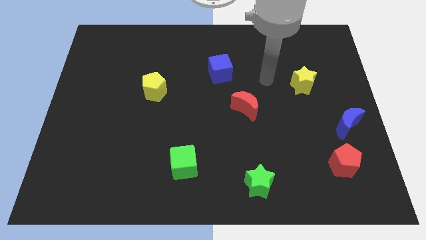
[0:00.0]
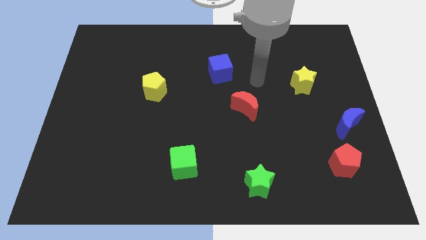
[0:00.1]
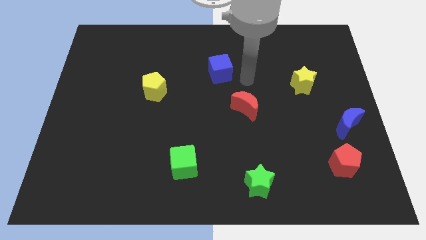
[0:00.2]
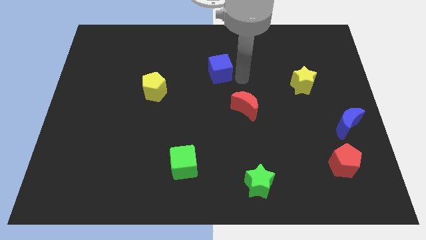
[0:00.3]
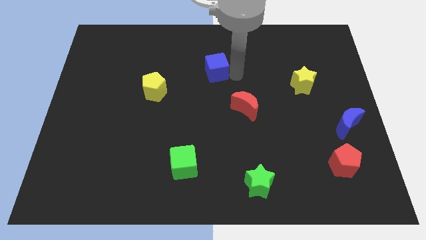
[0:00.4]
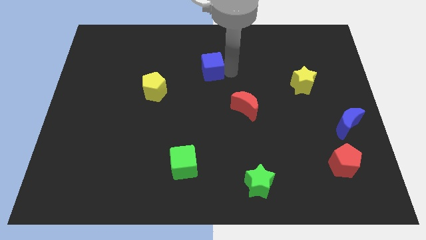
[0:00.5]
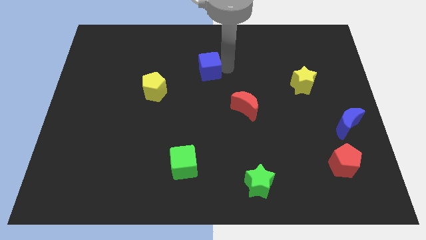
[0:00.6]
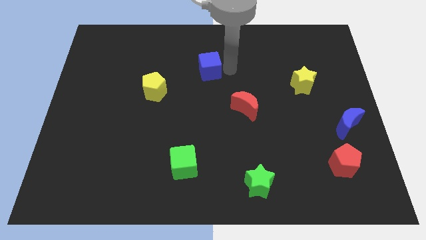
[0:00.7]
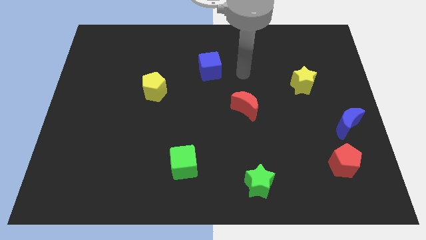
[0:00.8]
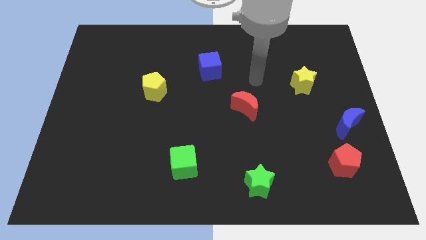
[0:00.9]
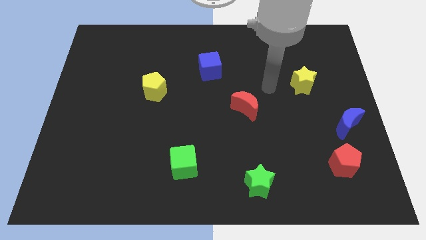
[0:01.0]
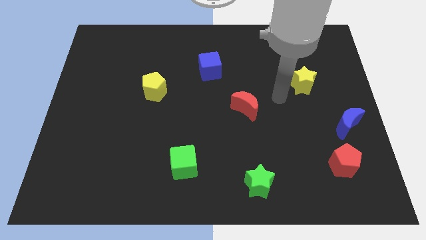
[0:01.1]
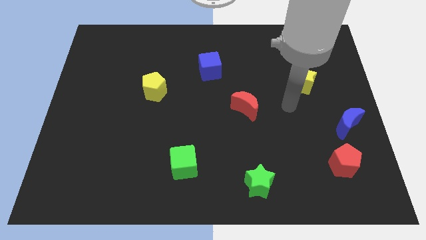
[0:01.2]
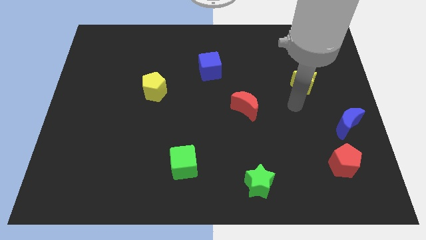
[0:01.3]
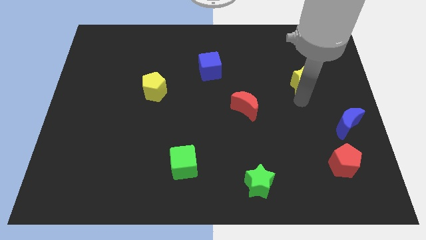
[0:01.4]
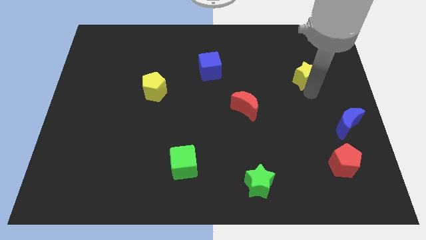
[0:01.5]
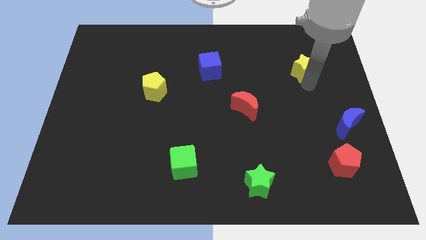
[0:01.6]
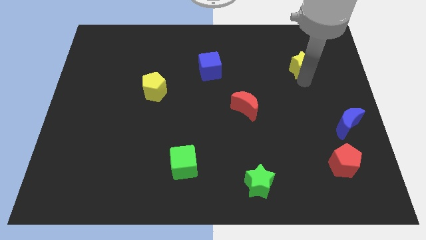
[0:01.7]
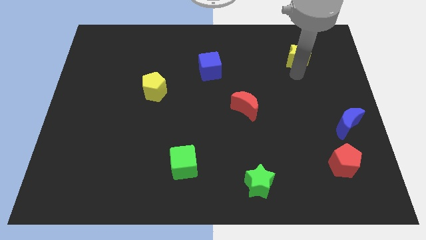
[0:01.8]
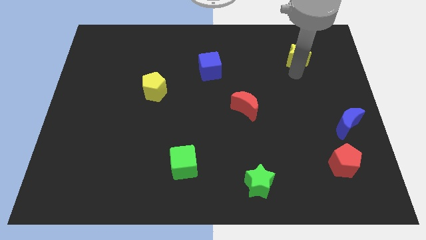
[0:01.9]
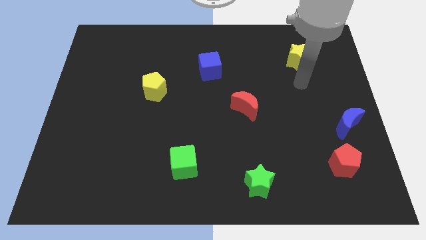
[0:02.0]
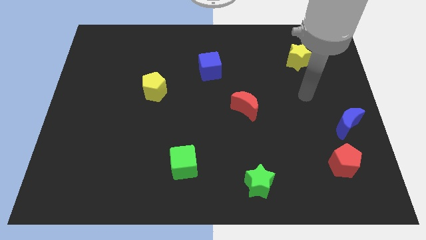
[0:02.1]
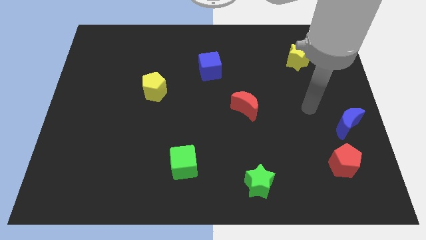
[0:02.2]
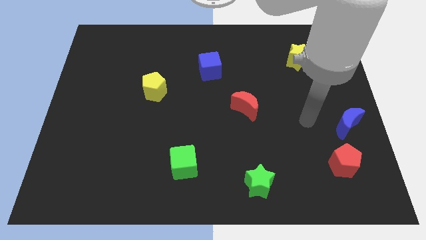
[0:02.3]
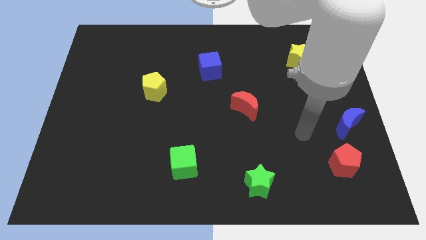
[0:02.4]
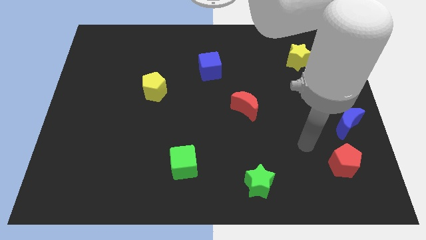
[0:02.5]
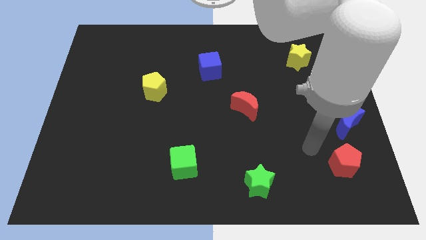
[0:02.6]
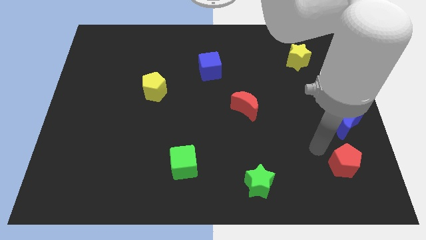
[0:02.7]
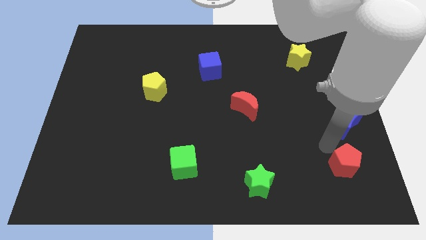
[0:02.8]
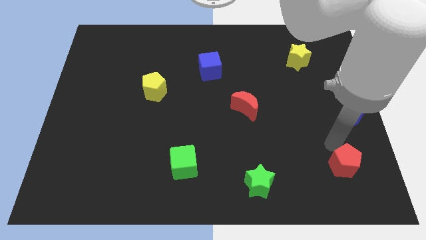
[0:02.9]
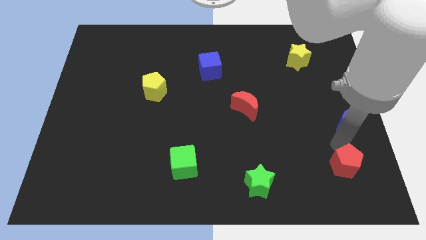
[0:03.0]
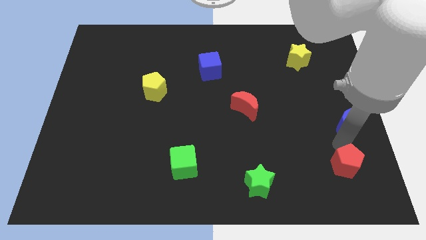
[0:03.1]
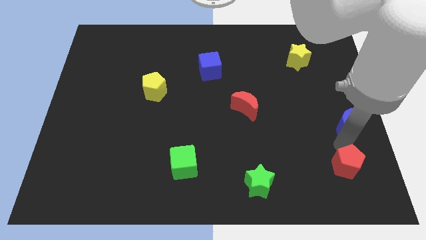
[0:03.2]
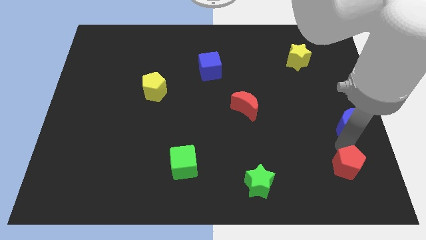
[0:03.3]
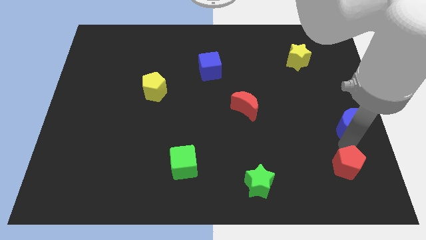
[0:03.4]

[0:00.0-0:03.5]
move your arm away from the blue cube

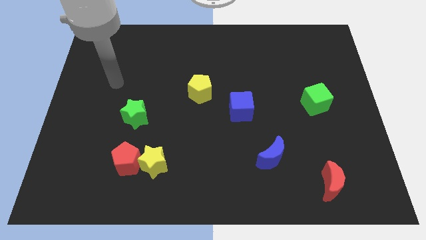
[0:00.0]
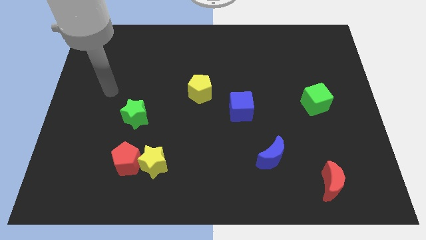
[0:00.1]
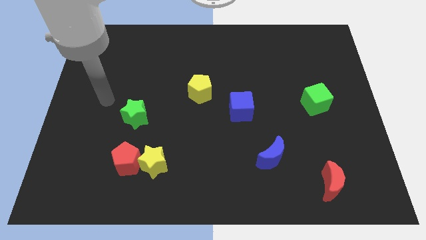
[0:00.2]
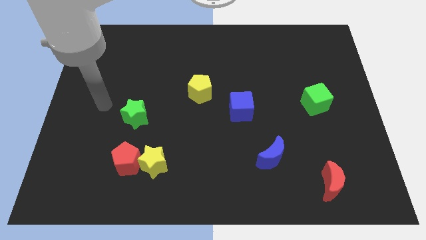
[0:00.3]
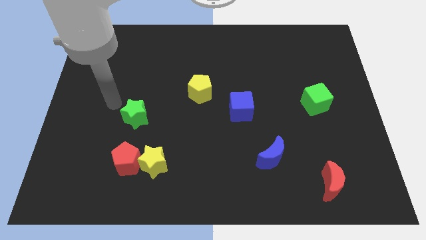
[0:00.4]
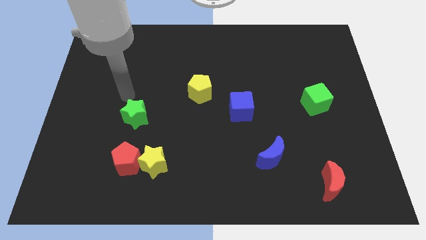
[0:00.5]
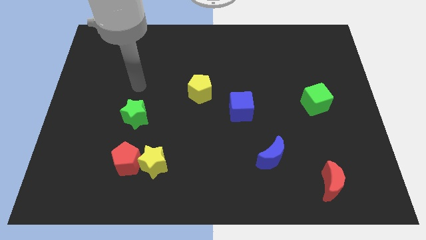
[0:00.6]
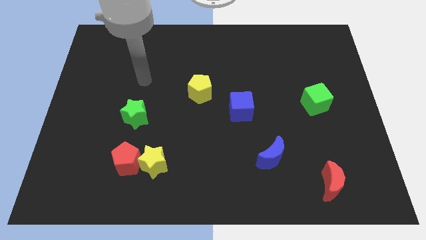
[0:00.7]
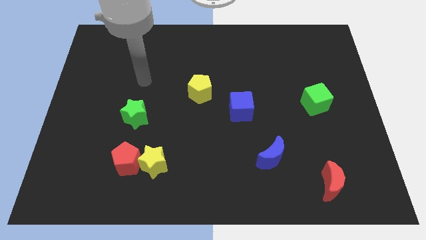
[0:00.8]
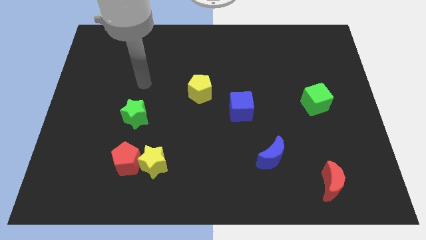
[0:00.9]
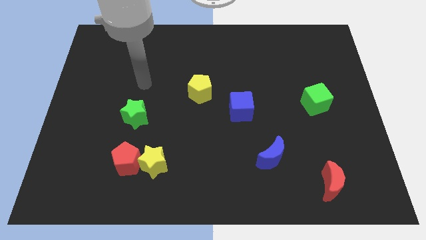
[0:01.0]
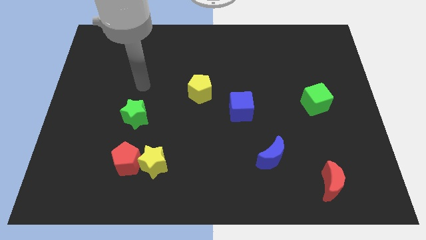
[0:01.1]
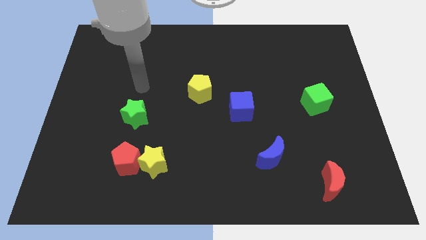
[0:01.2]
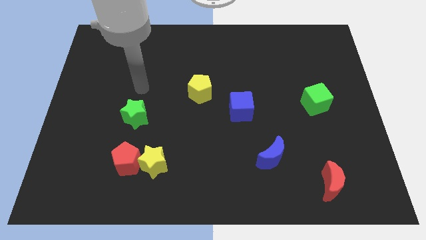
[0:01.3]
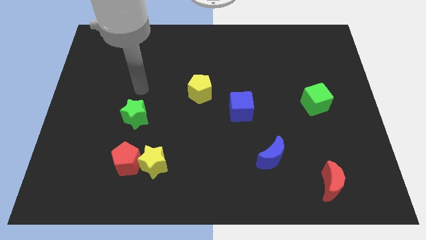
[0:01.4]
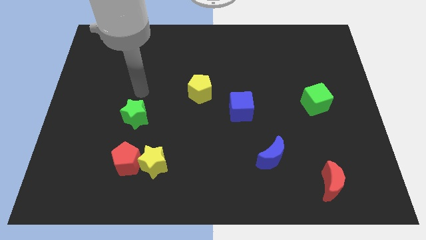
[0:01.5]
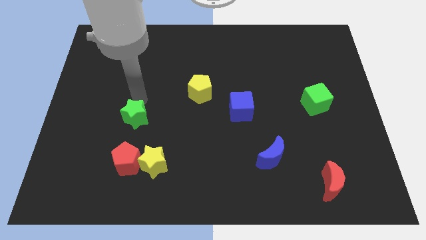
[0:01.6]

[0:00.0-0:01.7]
place the arm above the green star

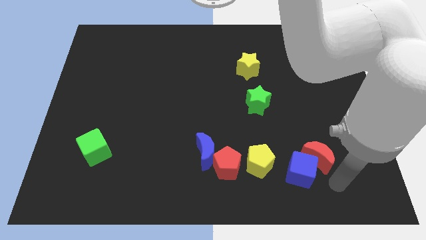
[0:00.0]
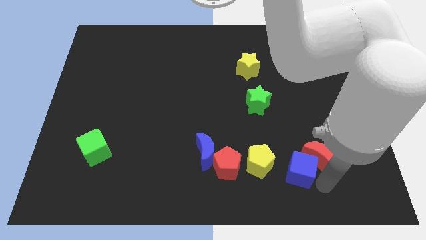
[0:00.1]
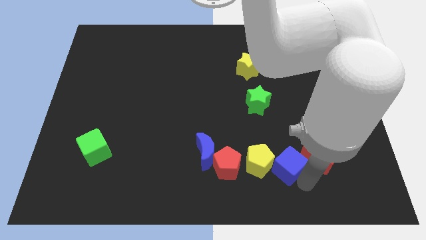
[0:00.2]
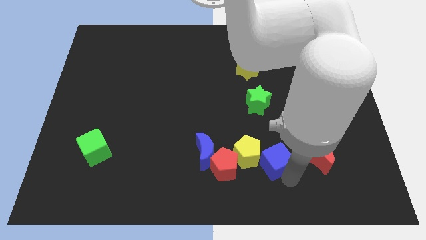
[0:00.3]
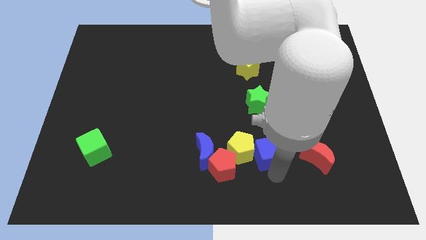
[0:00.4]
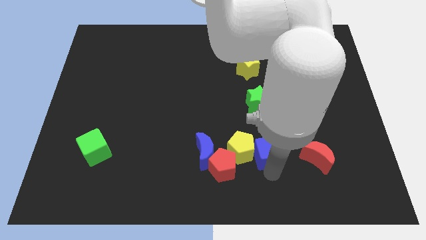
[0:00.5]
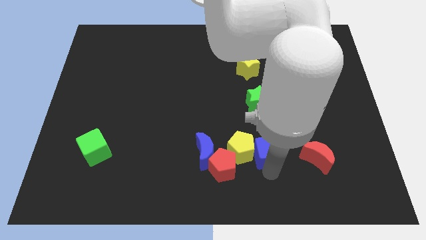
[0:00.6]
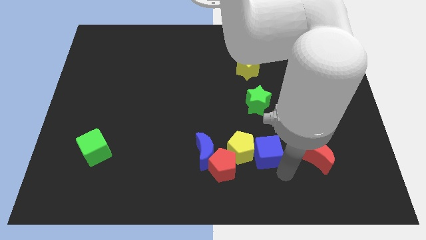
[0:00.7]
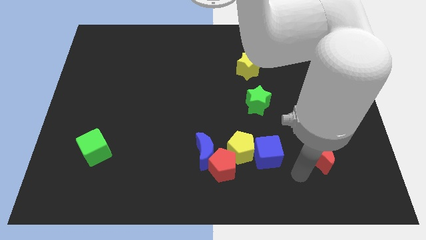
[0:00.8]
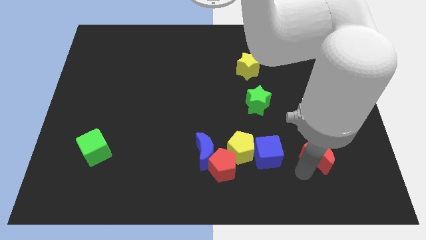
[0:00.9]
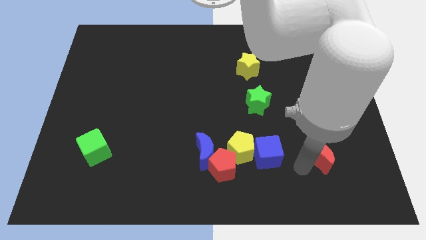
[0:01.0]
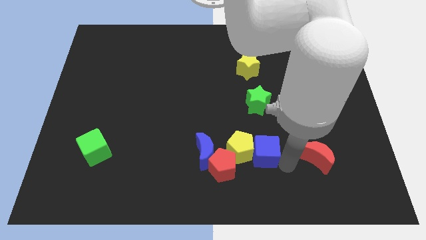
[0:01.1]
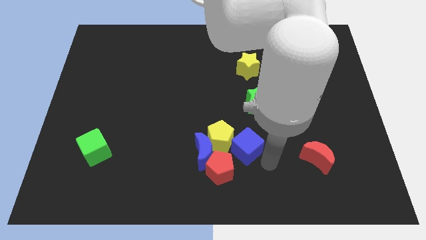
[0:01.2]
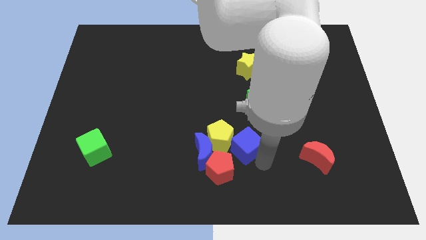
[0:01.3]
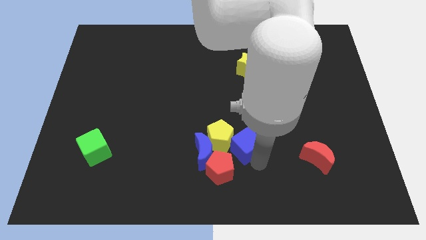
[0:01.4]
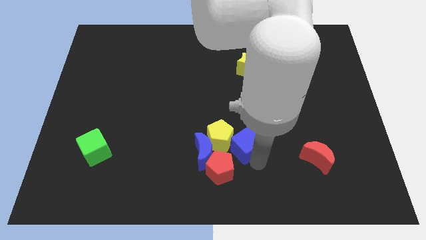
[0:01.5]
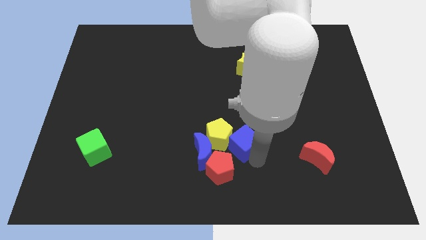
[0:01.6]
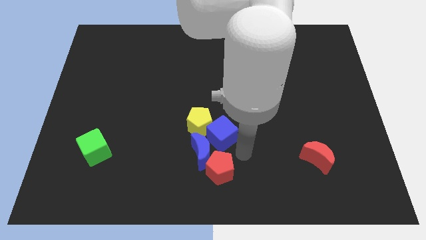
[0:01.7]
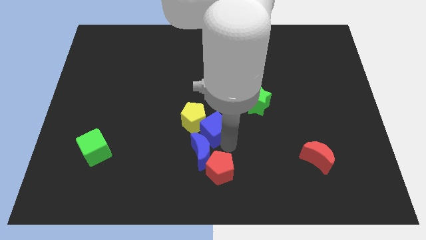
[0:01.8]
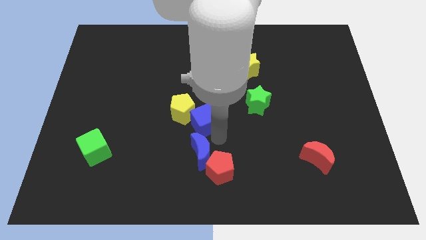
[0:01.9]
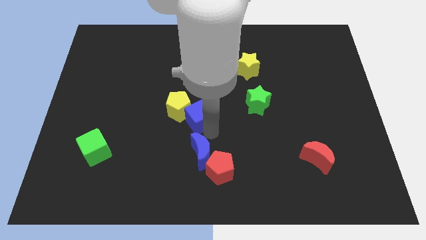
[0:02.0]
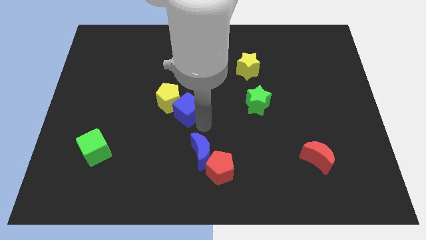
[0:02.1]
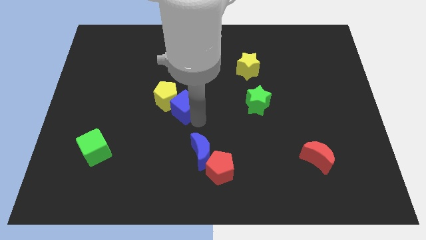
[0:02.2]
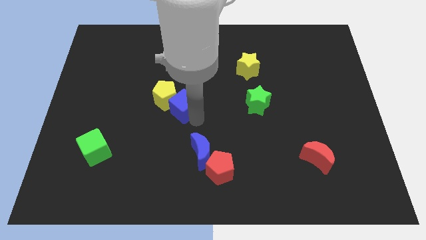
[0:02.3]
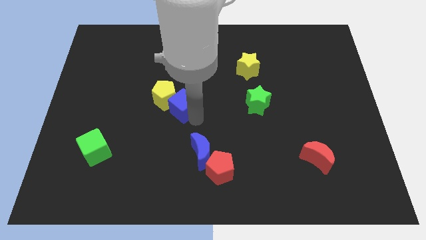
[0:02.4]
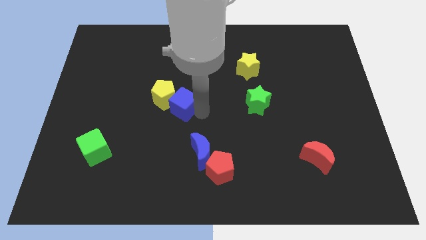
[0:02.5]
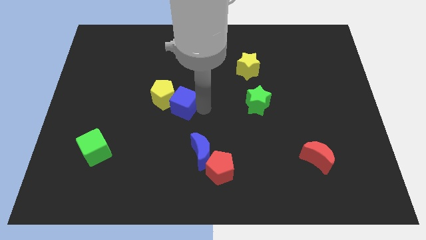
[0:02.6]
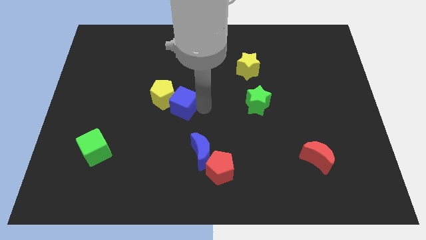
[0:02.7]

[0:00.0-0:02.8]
move blue cube along with yellow pentagon towards the top left of the board

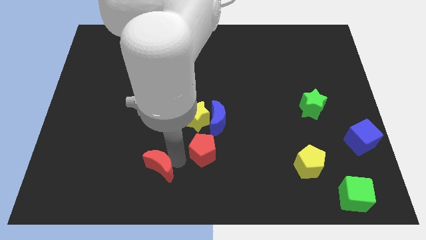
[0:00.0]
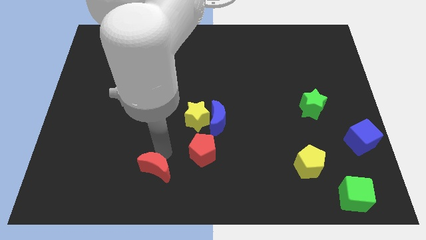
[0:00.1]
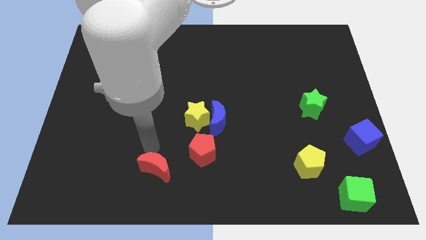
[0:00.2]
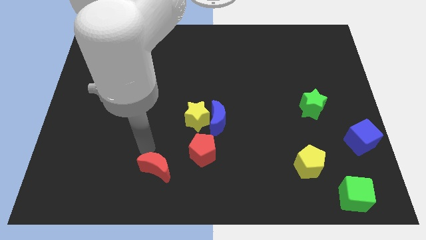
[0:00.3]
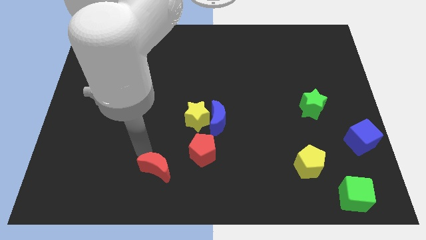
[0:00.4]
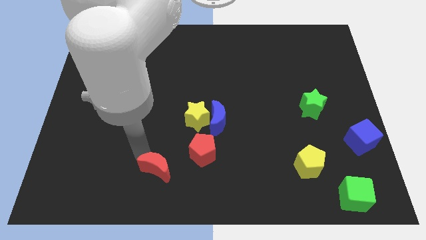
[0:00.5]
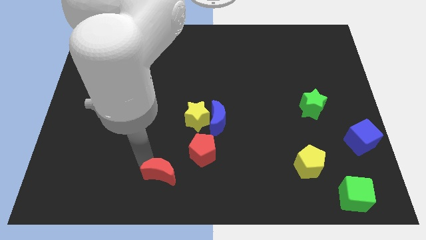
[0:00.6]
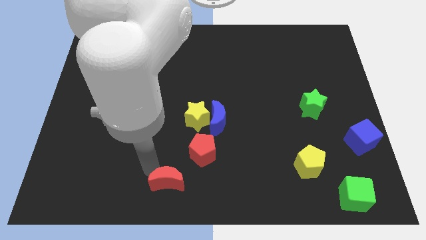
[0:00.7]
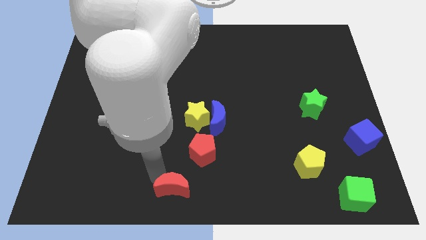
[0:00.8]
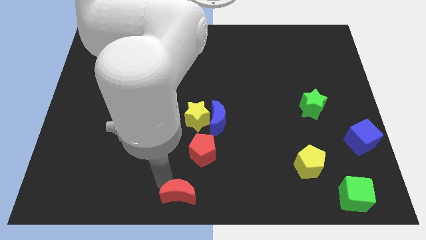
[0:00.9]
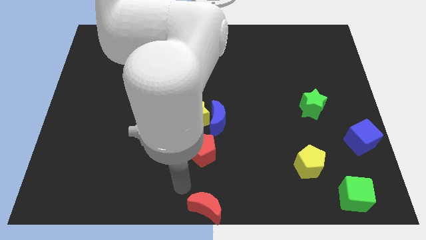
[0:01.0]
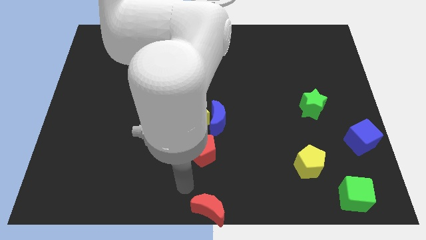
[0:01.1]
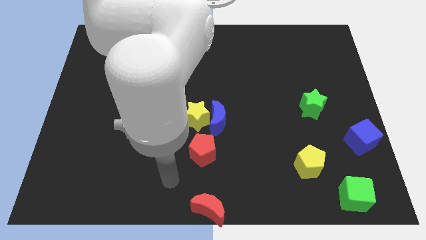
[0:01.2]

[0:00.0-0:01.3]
move the red crescent to the bottom center of the board
